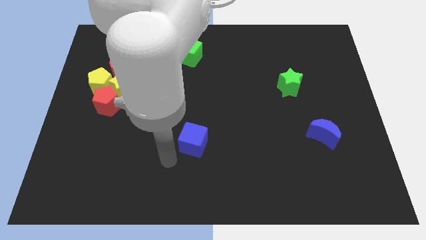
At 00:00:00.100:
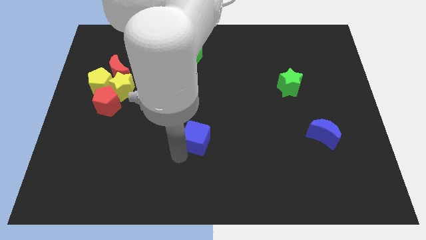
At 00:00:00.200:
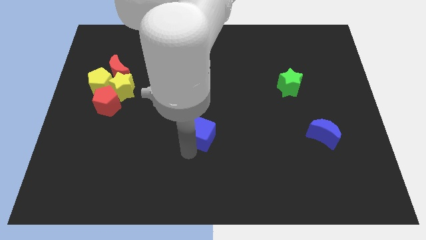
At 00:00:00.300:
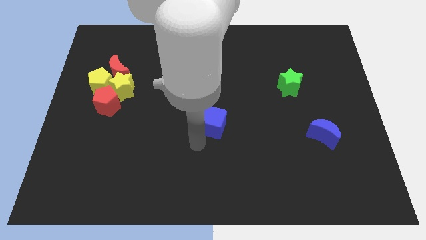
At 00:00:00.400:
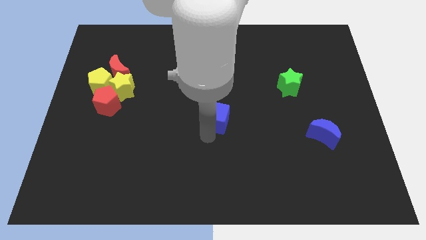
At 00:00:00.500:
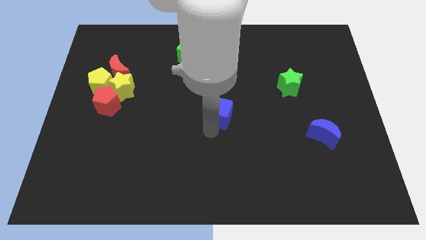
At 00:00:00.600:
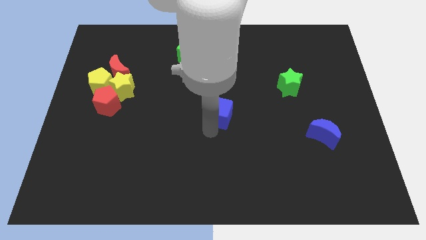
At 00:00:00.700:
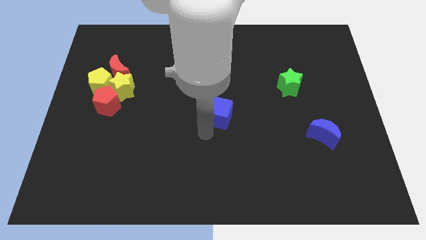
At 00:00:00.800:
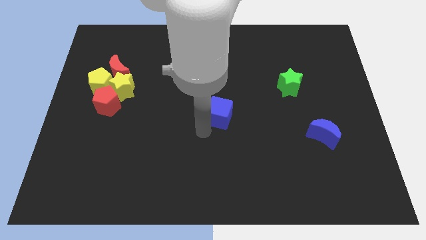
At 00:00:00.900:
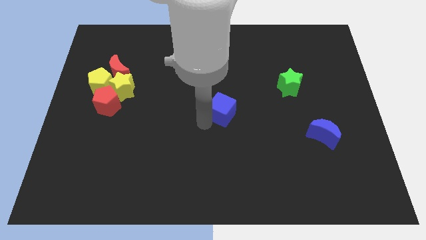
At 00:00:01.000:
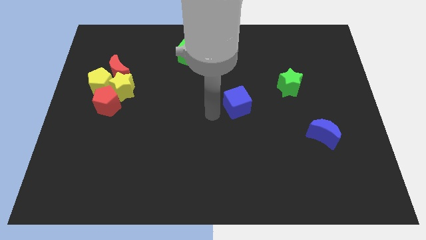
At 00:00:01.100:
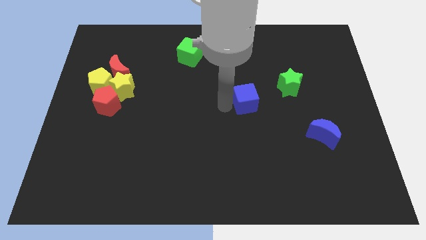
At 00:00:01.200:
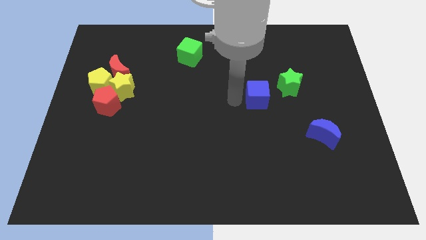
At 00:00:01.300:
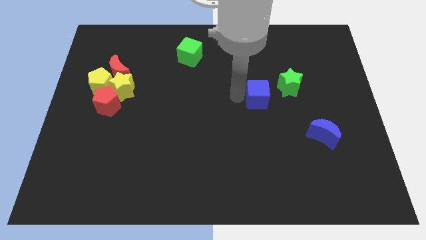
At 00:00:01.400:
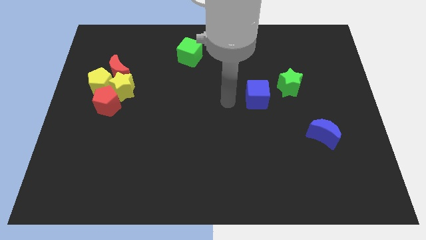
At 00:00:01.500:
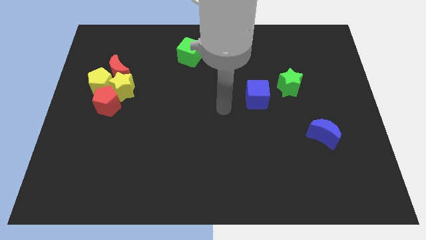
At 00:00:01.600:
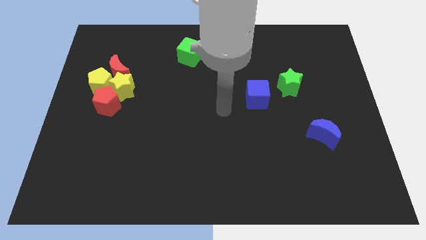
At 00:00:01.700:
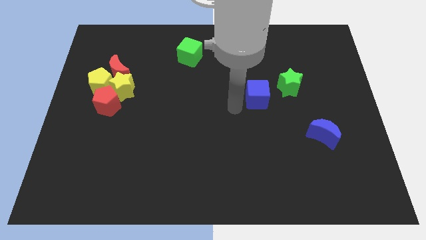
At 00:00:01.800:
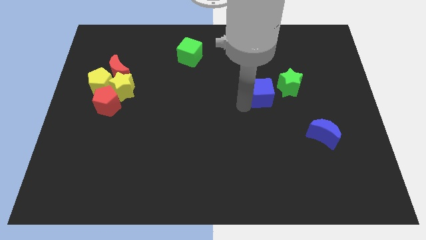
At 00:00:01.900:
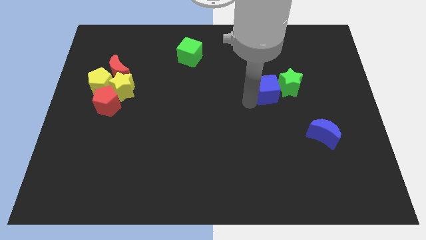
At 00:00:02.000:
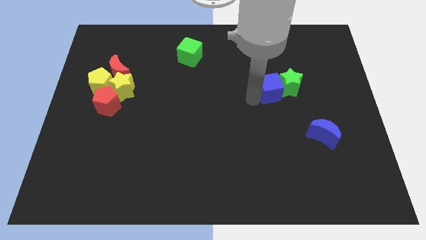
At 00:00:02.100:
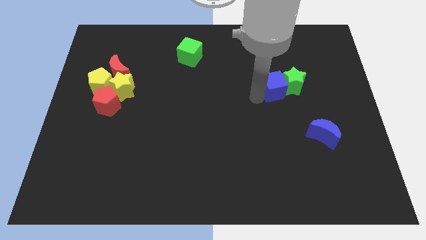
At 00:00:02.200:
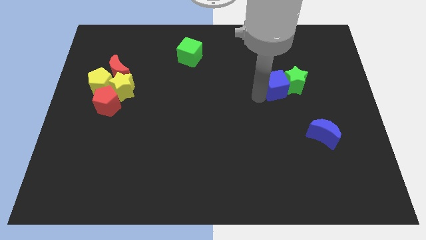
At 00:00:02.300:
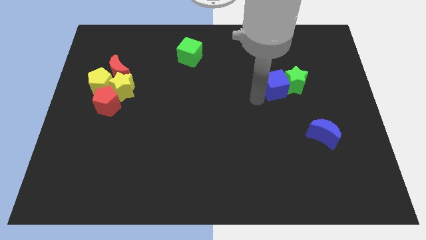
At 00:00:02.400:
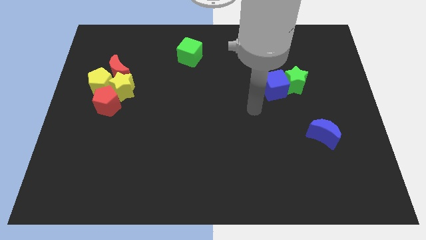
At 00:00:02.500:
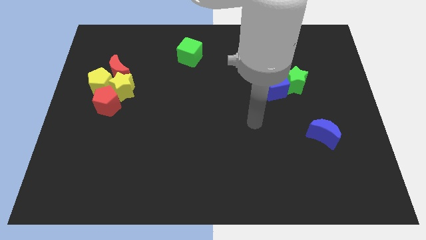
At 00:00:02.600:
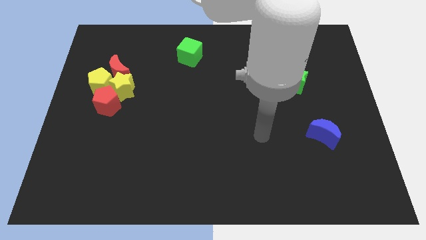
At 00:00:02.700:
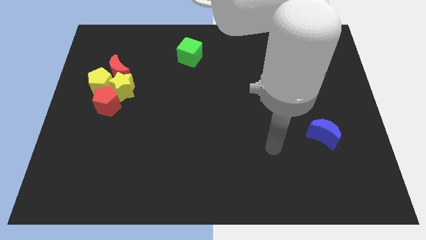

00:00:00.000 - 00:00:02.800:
push the blue cube into green star

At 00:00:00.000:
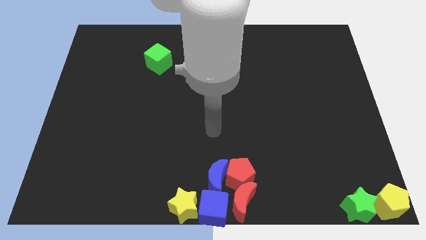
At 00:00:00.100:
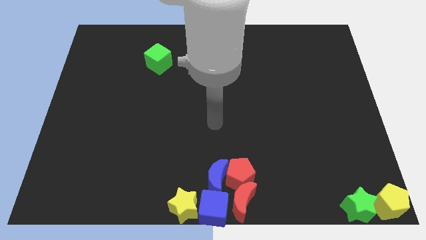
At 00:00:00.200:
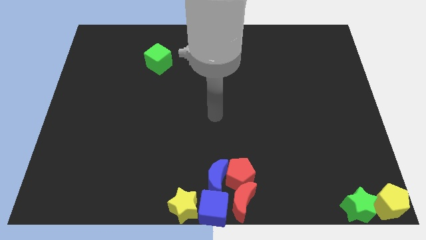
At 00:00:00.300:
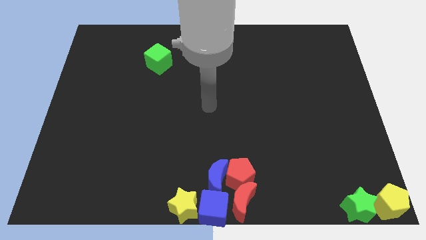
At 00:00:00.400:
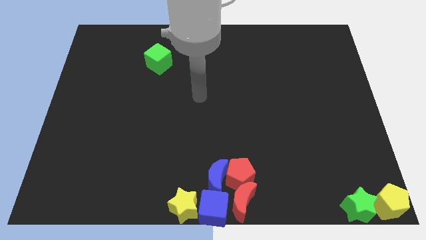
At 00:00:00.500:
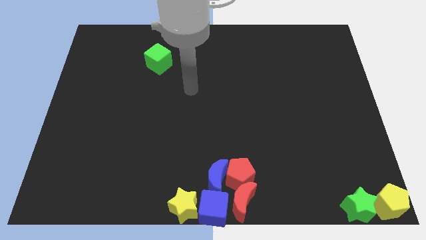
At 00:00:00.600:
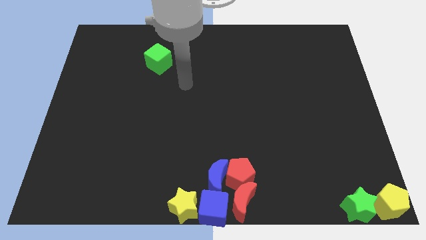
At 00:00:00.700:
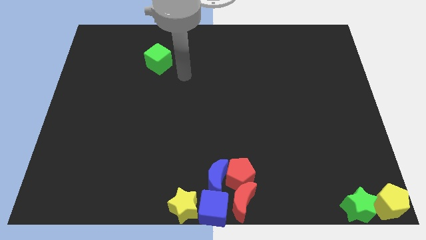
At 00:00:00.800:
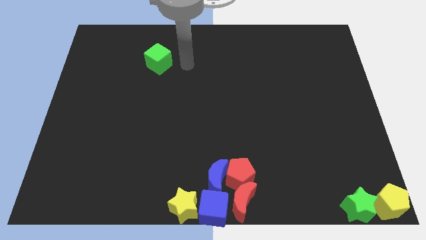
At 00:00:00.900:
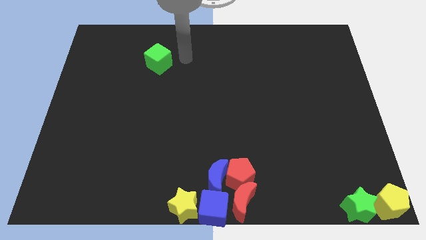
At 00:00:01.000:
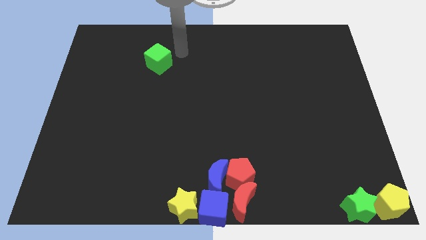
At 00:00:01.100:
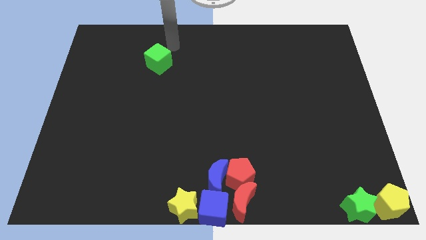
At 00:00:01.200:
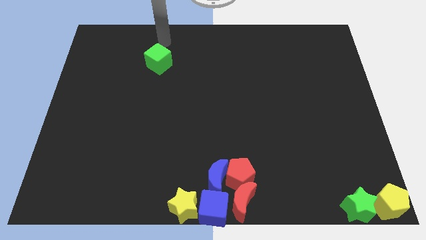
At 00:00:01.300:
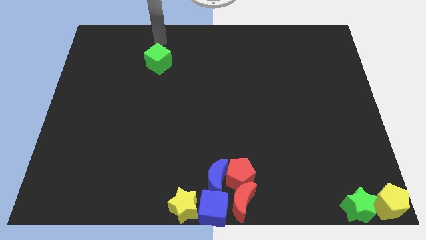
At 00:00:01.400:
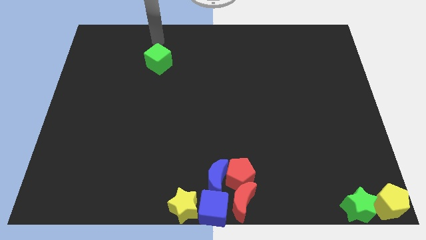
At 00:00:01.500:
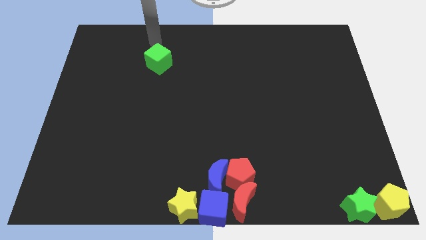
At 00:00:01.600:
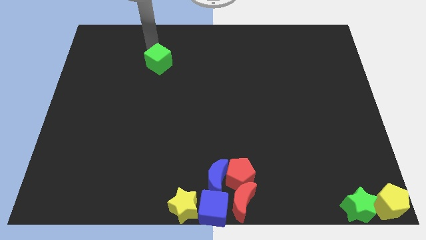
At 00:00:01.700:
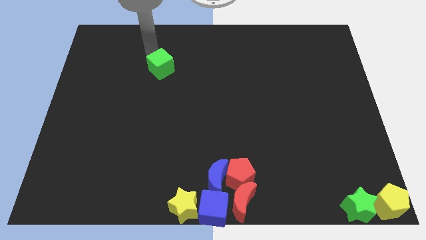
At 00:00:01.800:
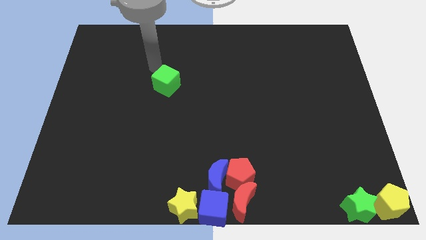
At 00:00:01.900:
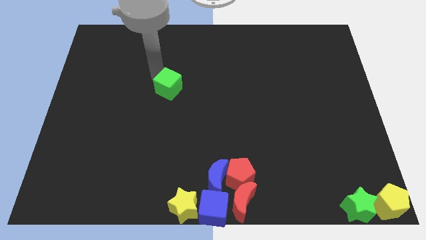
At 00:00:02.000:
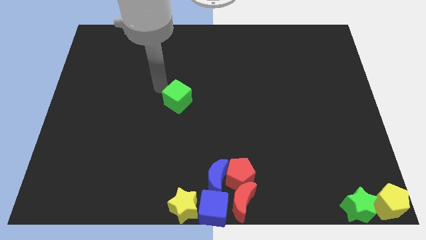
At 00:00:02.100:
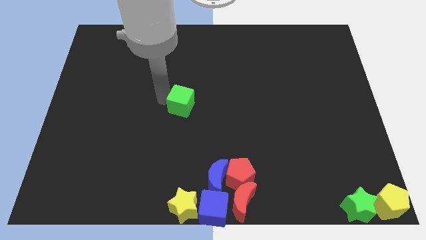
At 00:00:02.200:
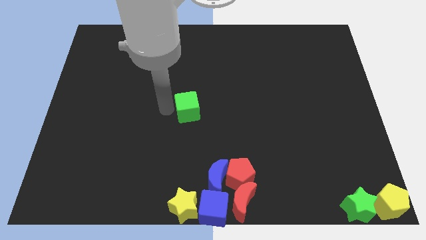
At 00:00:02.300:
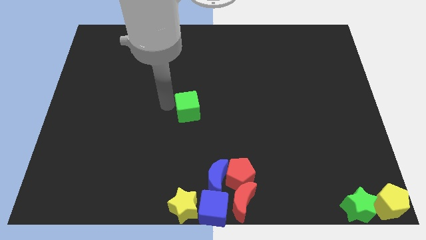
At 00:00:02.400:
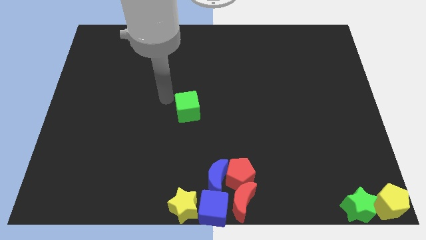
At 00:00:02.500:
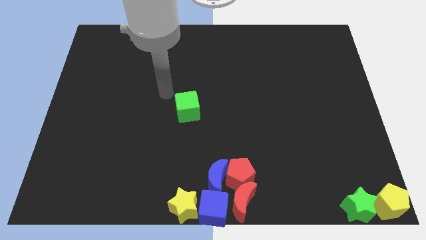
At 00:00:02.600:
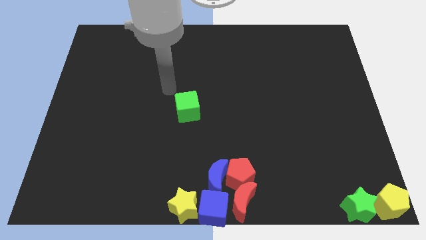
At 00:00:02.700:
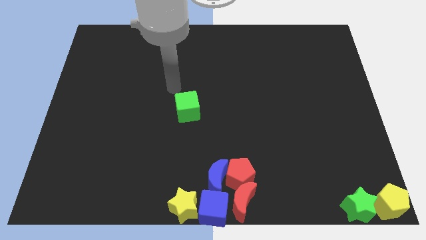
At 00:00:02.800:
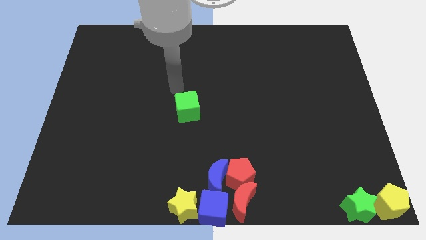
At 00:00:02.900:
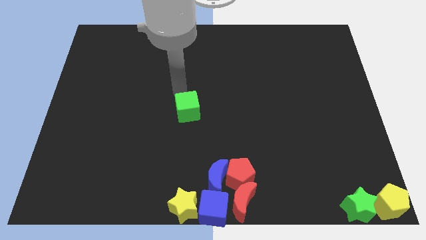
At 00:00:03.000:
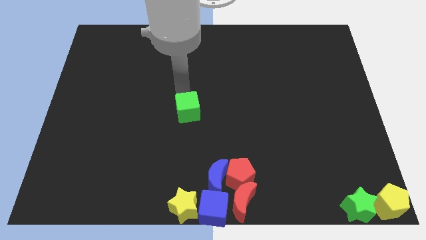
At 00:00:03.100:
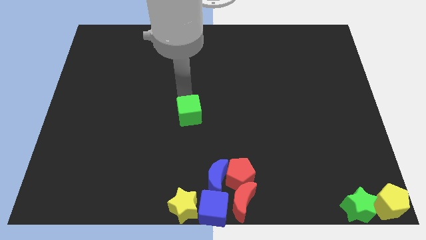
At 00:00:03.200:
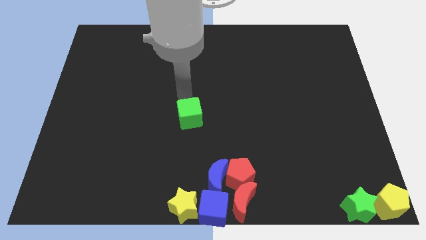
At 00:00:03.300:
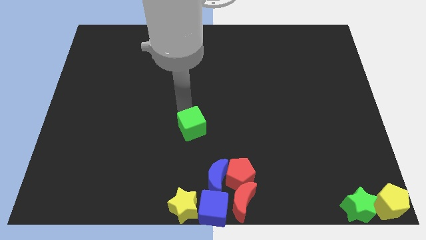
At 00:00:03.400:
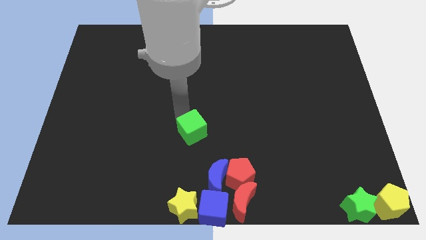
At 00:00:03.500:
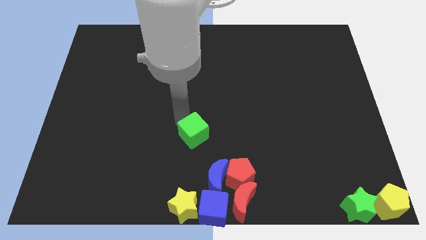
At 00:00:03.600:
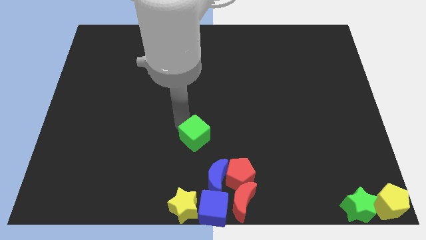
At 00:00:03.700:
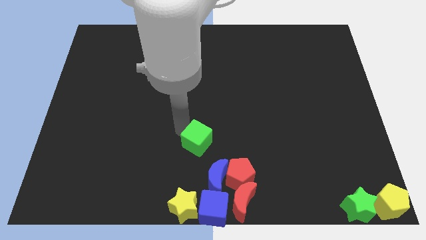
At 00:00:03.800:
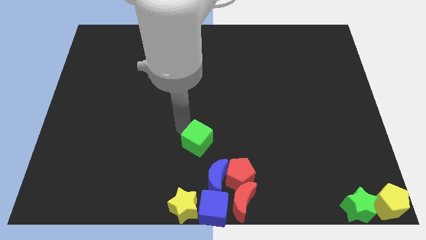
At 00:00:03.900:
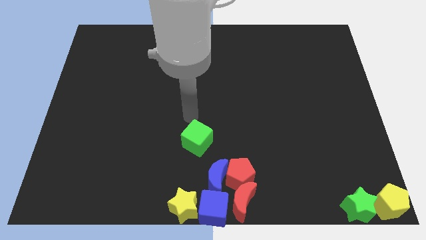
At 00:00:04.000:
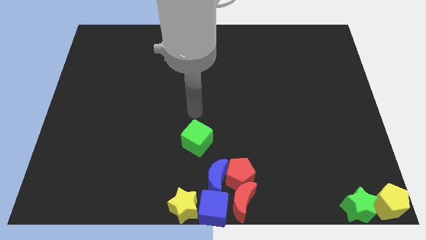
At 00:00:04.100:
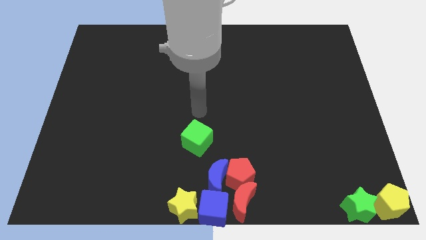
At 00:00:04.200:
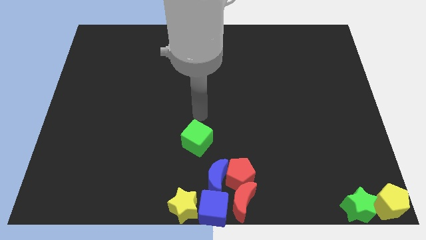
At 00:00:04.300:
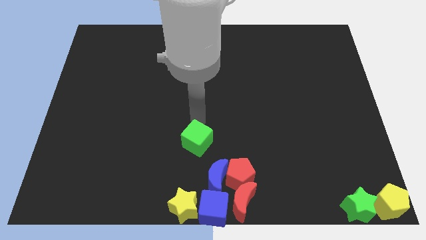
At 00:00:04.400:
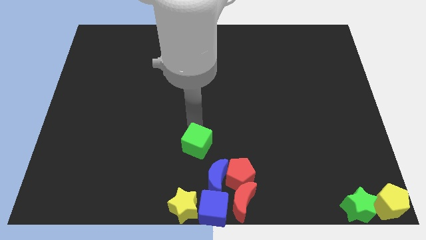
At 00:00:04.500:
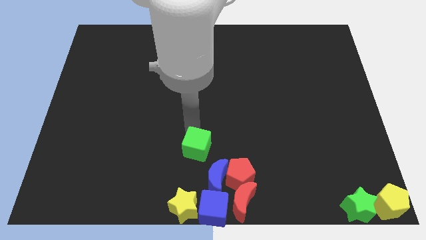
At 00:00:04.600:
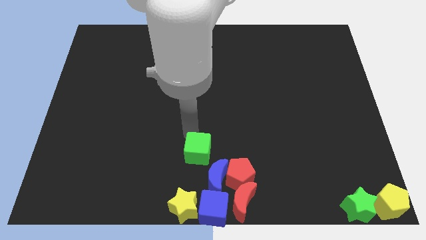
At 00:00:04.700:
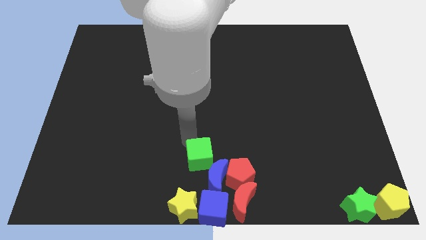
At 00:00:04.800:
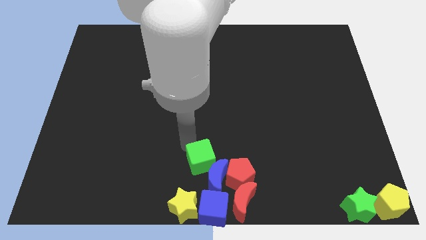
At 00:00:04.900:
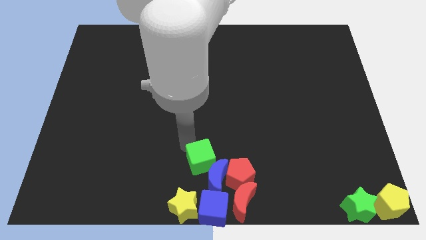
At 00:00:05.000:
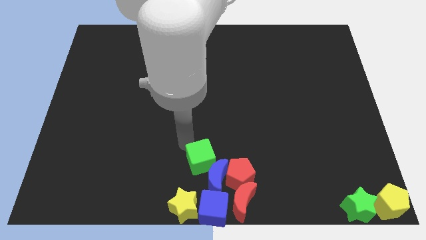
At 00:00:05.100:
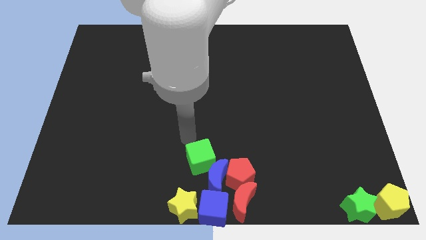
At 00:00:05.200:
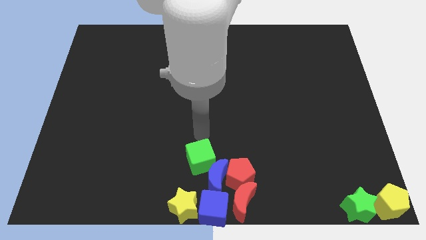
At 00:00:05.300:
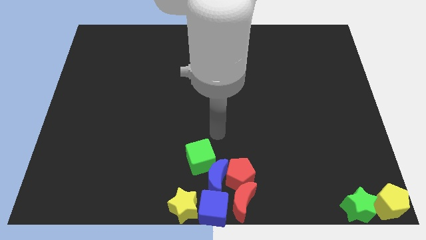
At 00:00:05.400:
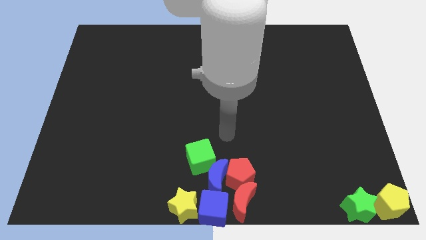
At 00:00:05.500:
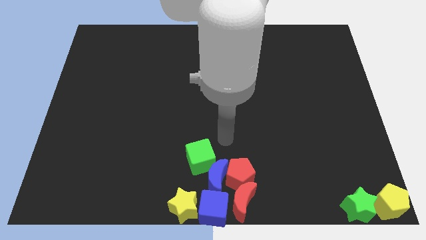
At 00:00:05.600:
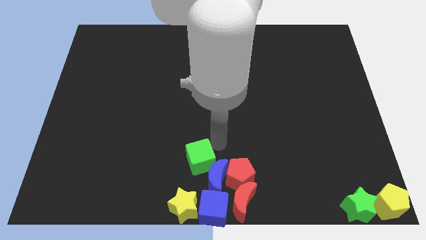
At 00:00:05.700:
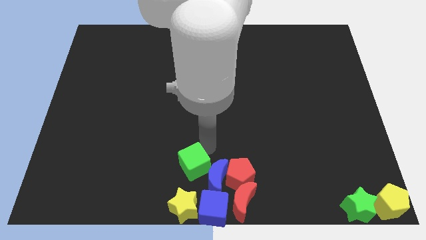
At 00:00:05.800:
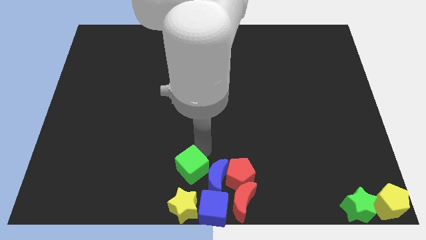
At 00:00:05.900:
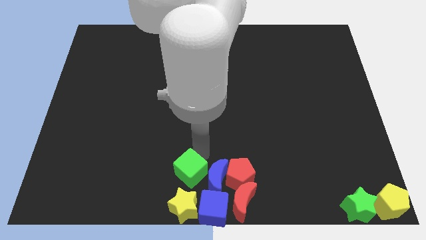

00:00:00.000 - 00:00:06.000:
push the green cube to the top of the yellow star
